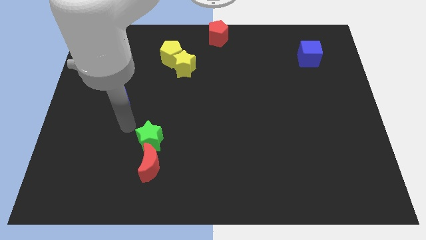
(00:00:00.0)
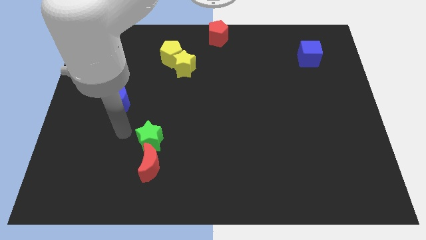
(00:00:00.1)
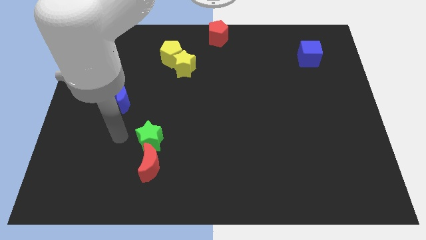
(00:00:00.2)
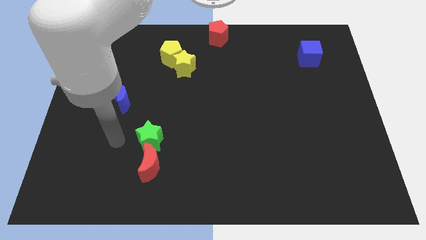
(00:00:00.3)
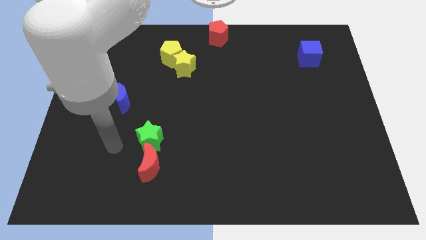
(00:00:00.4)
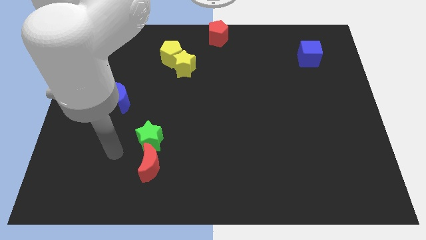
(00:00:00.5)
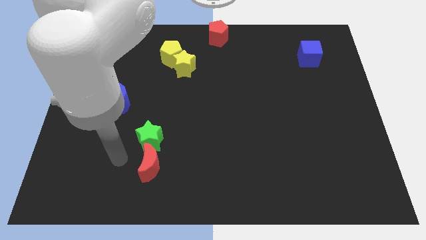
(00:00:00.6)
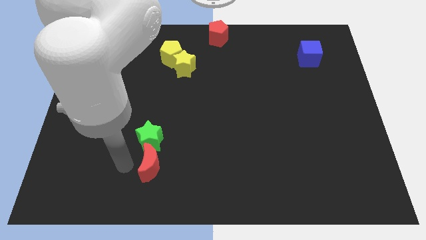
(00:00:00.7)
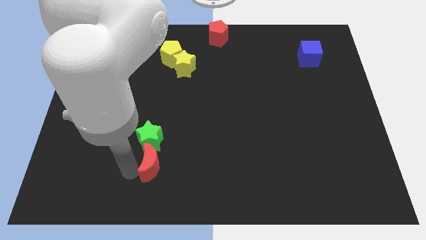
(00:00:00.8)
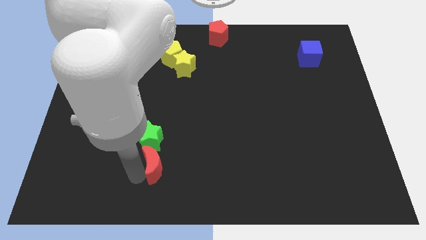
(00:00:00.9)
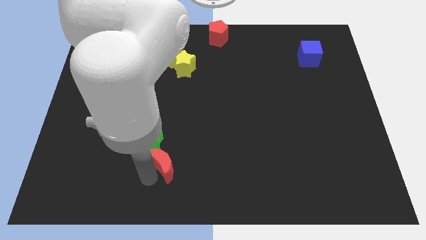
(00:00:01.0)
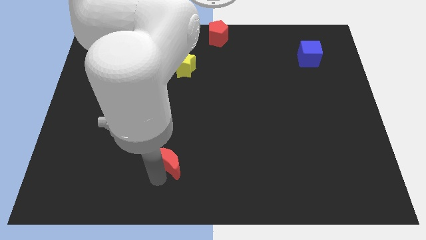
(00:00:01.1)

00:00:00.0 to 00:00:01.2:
place your arm to the left side of red moon

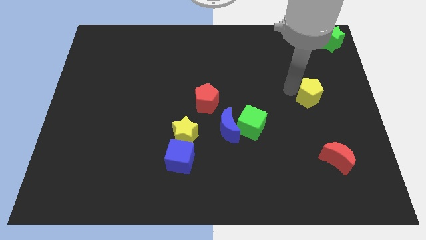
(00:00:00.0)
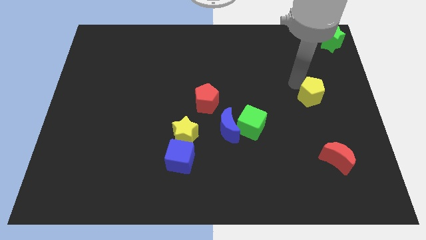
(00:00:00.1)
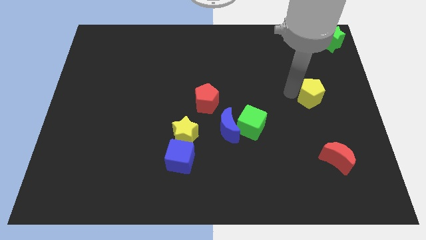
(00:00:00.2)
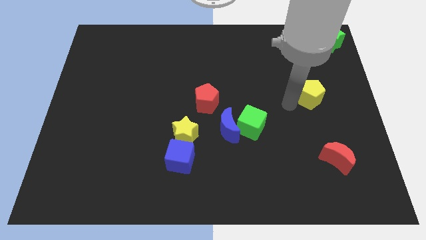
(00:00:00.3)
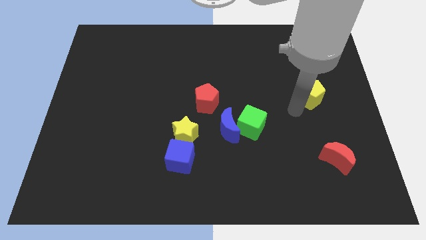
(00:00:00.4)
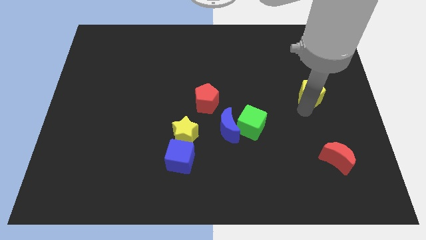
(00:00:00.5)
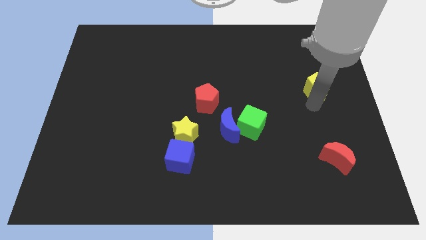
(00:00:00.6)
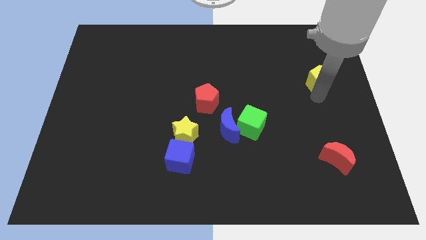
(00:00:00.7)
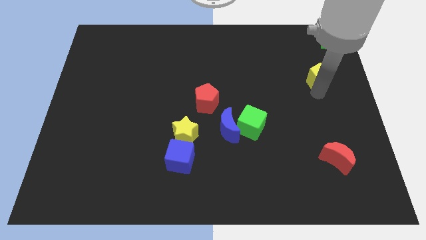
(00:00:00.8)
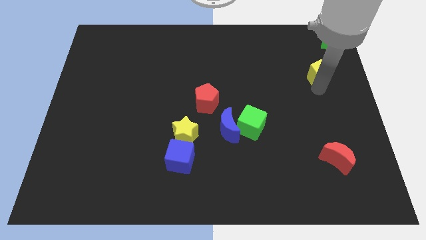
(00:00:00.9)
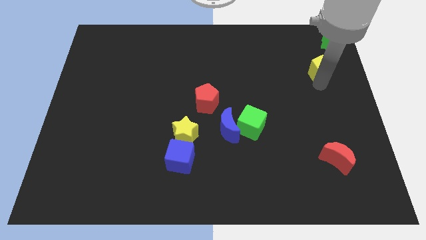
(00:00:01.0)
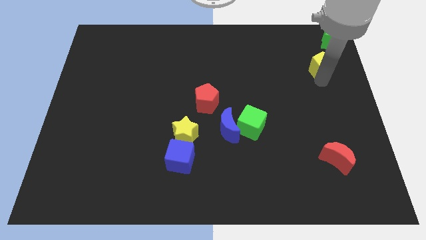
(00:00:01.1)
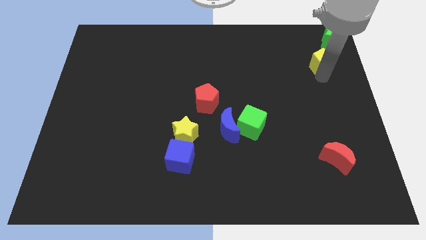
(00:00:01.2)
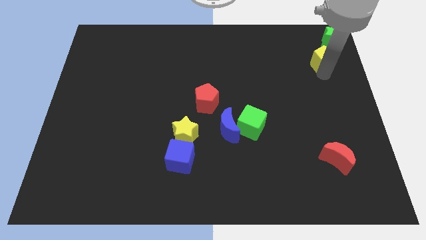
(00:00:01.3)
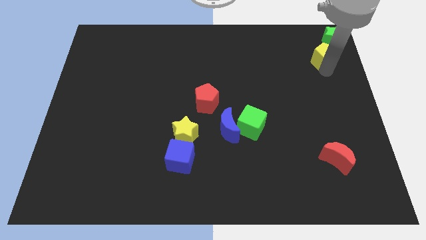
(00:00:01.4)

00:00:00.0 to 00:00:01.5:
push the yellow pentagon towards the green star

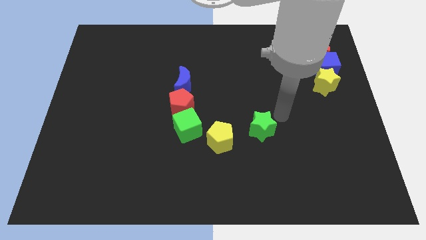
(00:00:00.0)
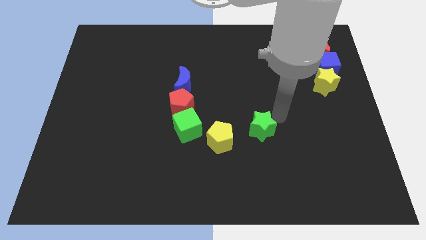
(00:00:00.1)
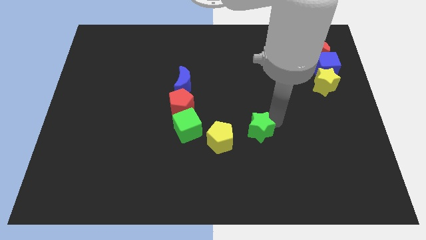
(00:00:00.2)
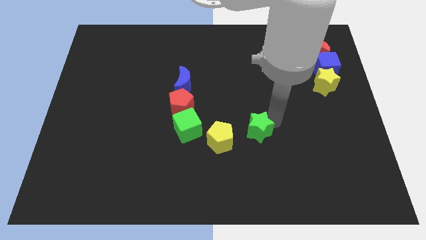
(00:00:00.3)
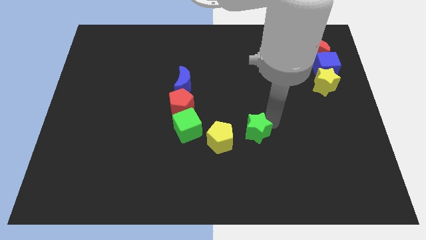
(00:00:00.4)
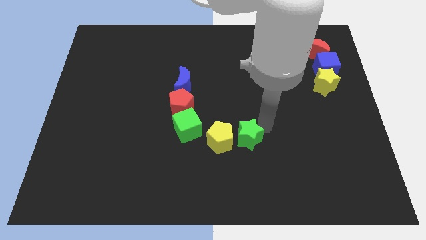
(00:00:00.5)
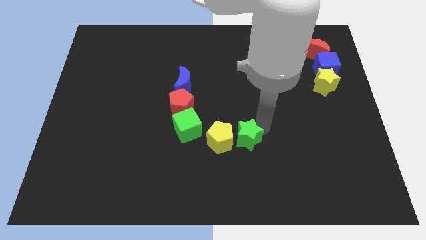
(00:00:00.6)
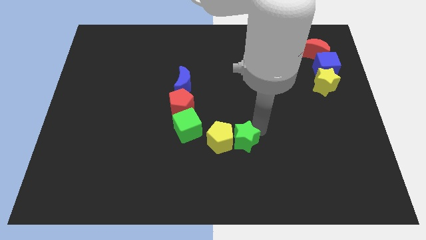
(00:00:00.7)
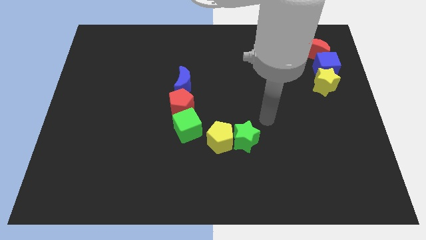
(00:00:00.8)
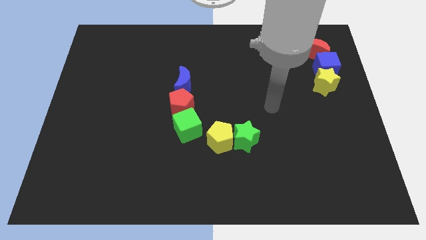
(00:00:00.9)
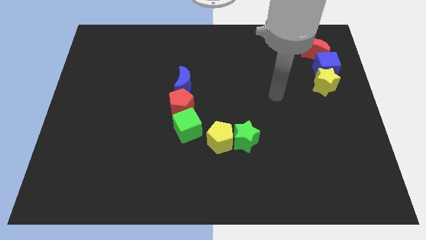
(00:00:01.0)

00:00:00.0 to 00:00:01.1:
move green star into yellow pentagon

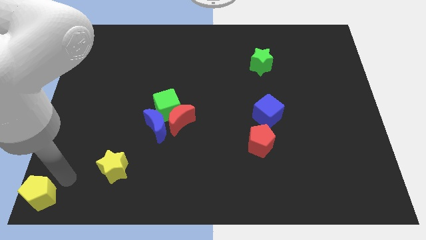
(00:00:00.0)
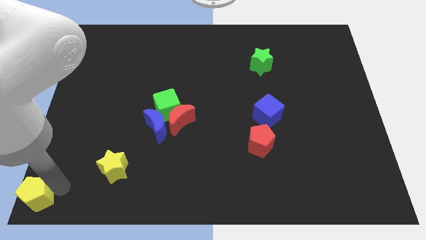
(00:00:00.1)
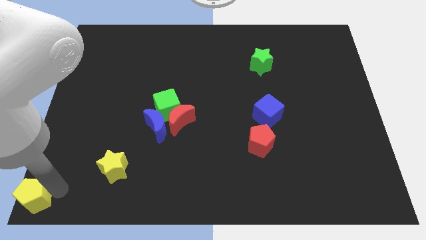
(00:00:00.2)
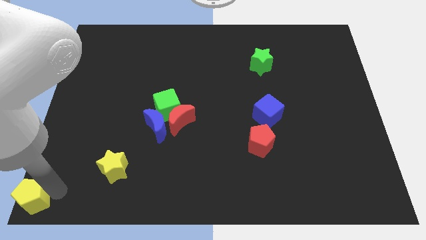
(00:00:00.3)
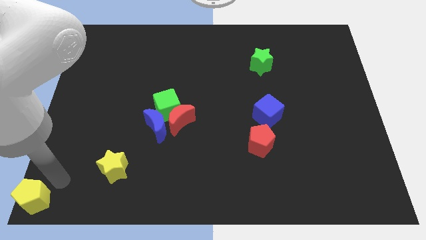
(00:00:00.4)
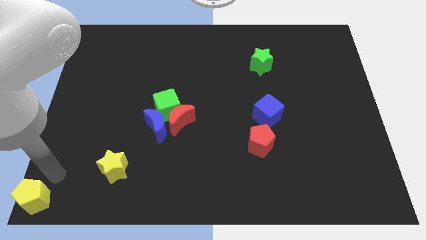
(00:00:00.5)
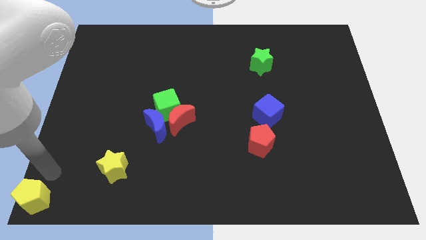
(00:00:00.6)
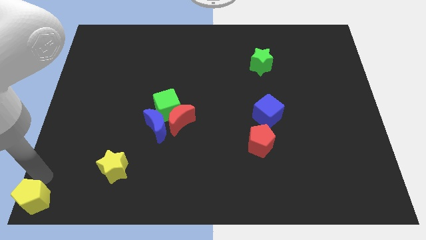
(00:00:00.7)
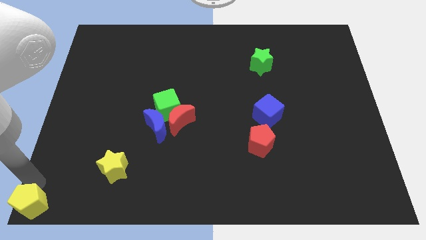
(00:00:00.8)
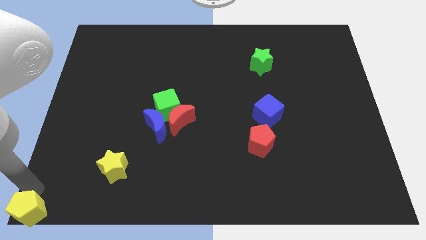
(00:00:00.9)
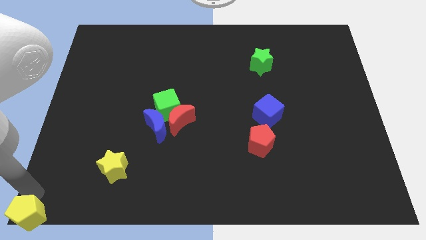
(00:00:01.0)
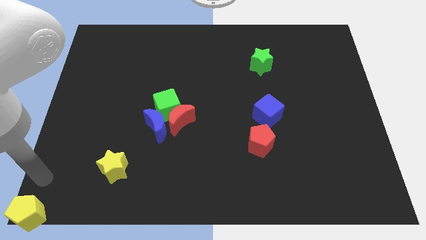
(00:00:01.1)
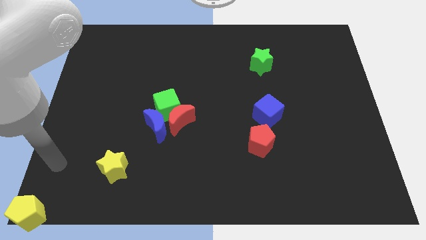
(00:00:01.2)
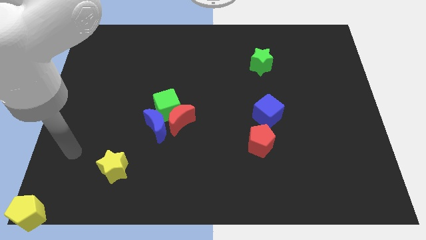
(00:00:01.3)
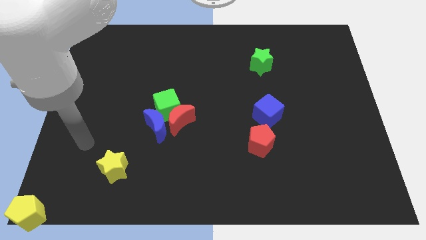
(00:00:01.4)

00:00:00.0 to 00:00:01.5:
put the yellow pentagon at the bottom left corner

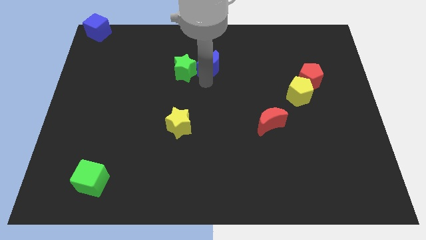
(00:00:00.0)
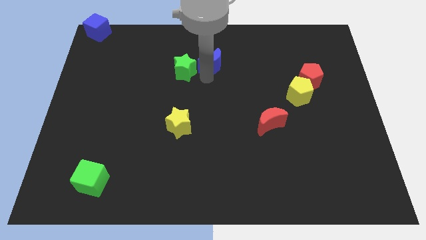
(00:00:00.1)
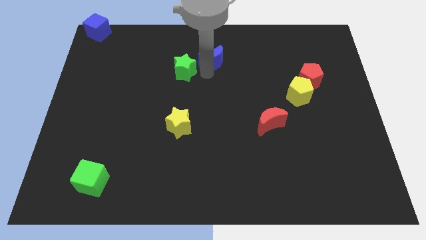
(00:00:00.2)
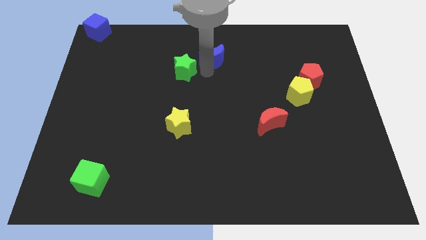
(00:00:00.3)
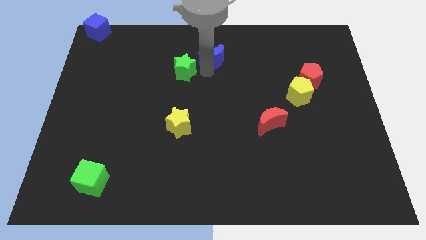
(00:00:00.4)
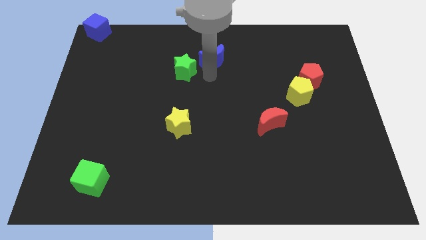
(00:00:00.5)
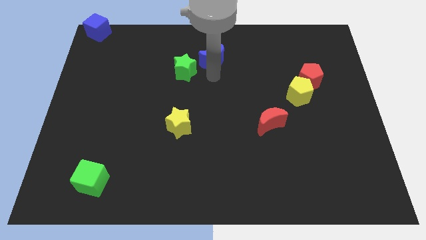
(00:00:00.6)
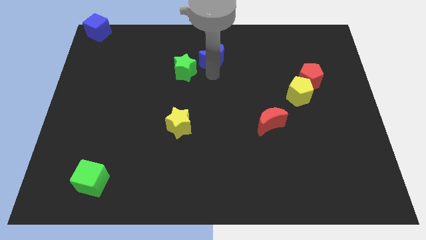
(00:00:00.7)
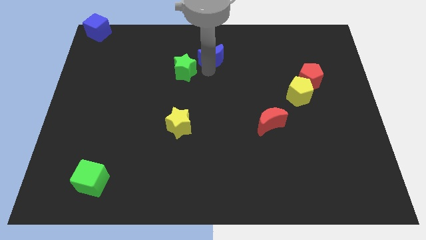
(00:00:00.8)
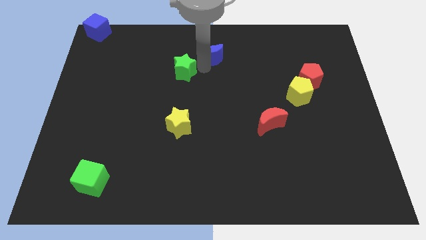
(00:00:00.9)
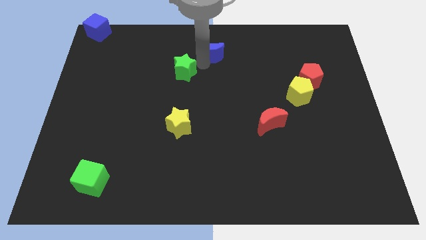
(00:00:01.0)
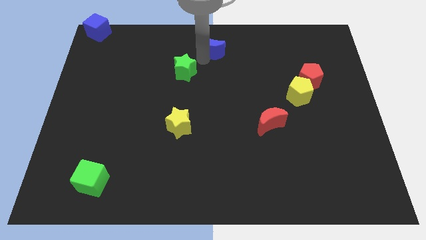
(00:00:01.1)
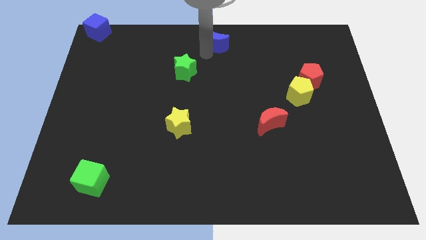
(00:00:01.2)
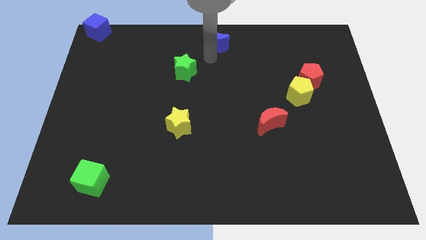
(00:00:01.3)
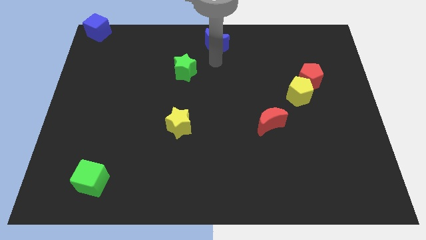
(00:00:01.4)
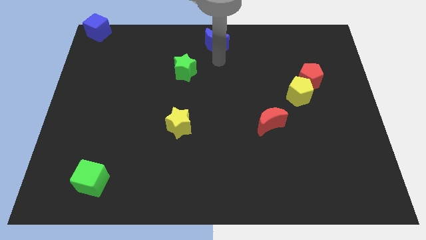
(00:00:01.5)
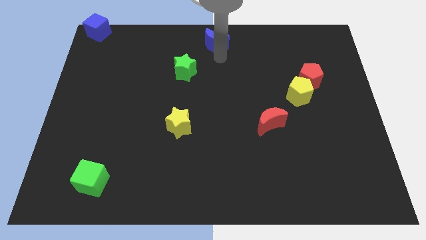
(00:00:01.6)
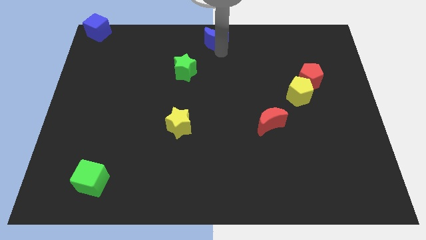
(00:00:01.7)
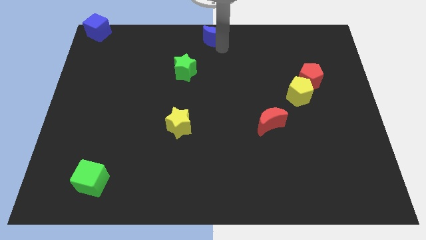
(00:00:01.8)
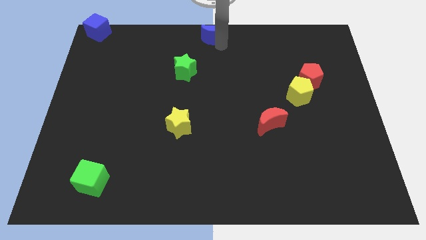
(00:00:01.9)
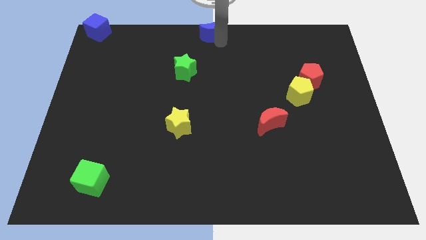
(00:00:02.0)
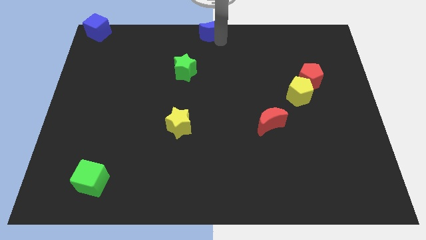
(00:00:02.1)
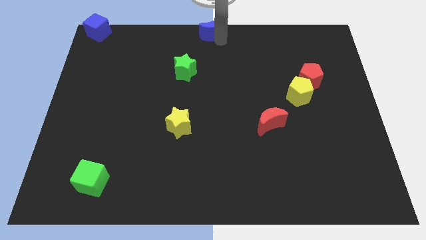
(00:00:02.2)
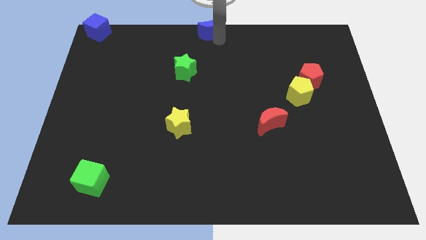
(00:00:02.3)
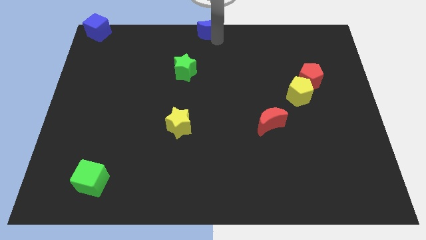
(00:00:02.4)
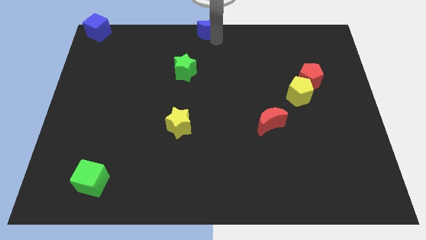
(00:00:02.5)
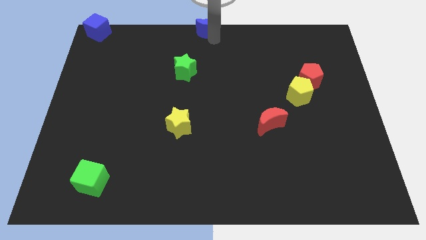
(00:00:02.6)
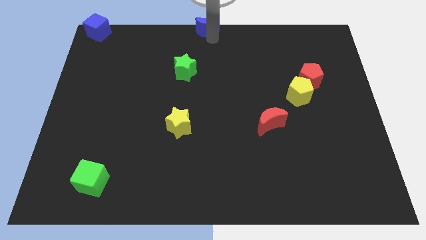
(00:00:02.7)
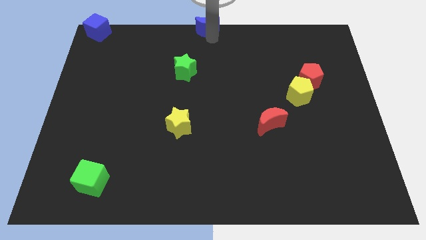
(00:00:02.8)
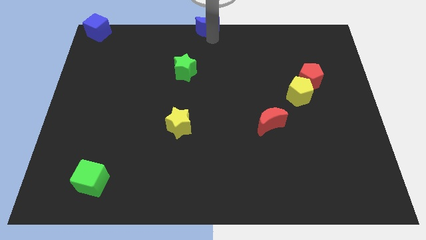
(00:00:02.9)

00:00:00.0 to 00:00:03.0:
place the blue moon at the top center of the board

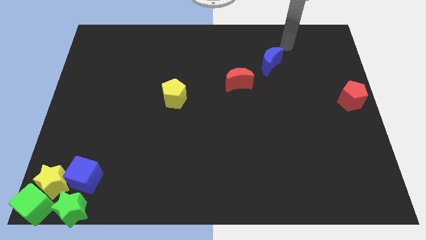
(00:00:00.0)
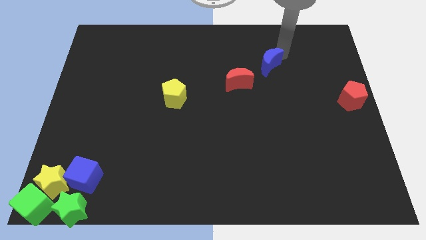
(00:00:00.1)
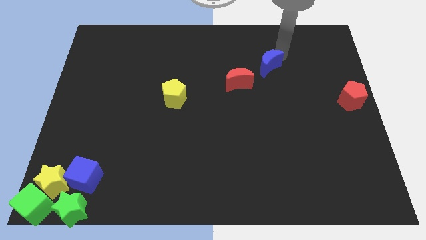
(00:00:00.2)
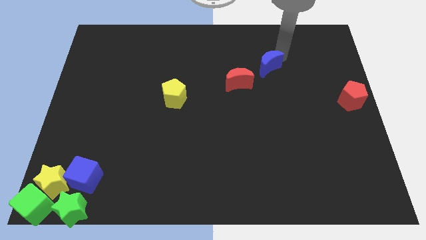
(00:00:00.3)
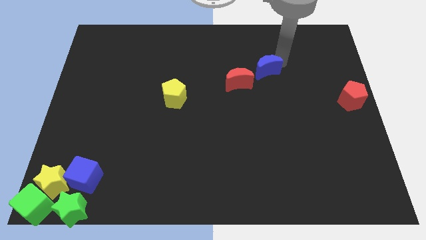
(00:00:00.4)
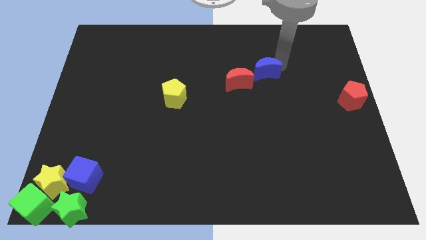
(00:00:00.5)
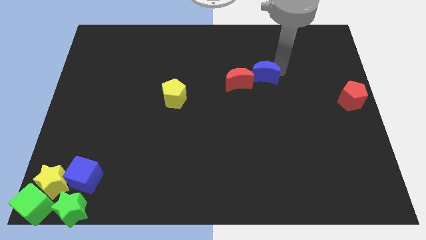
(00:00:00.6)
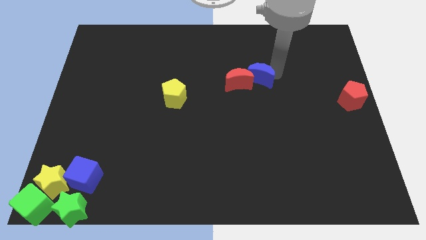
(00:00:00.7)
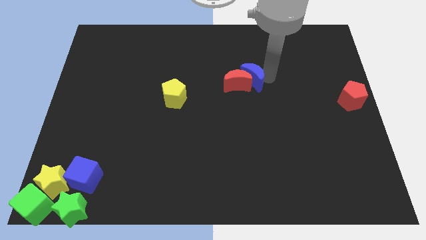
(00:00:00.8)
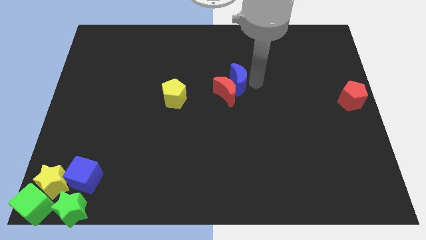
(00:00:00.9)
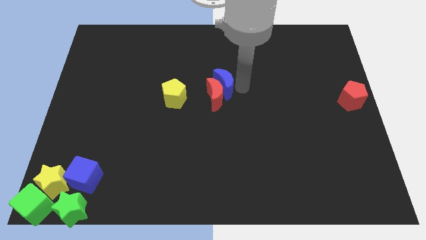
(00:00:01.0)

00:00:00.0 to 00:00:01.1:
push blue moon into red moon
